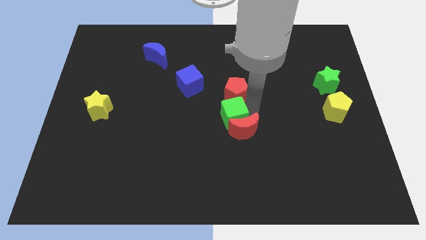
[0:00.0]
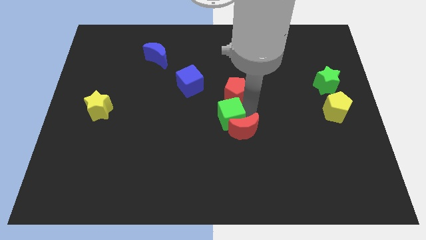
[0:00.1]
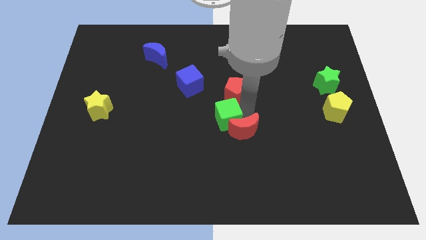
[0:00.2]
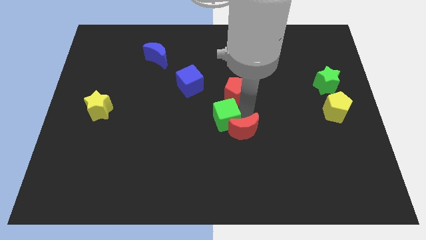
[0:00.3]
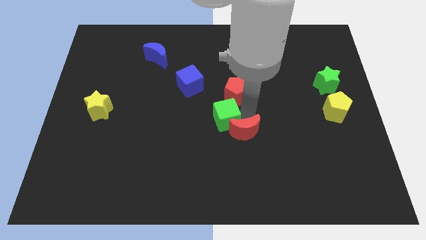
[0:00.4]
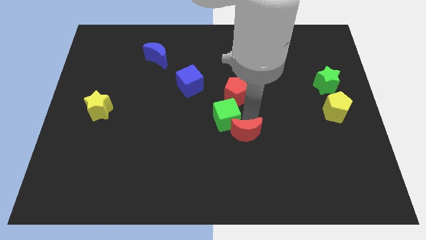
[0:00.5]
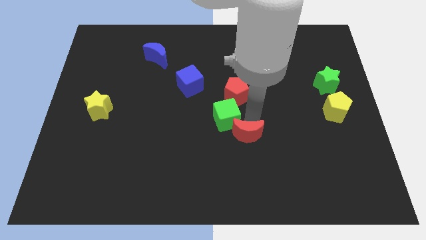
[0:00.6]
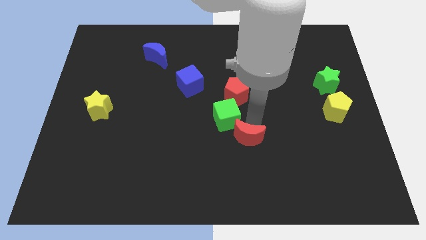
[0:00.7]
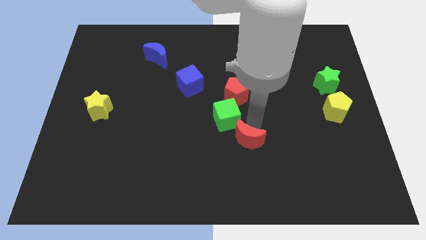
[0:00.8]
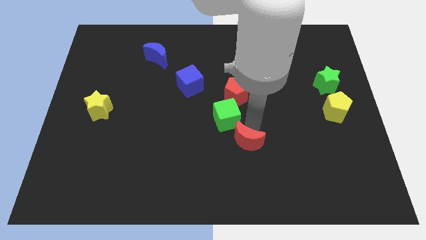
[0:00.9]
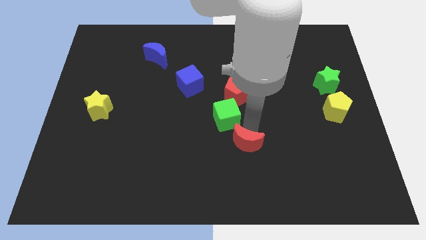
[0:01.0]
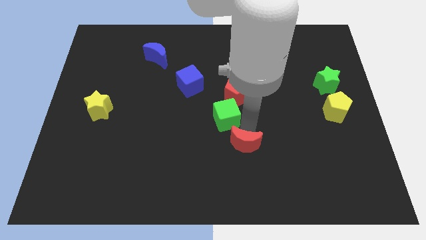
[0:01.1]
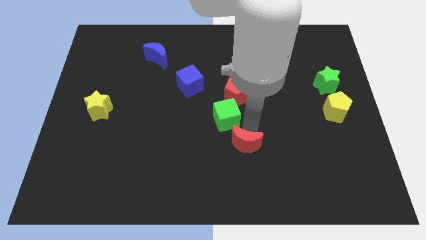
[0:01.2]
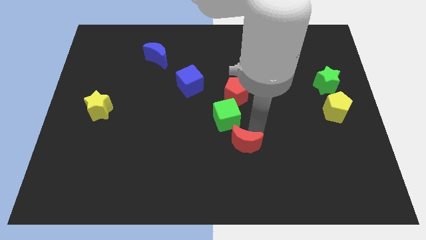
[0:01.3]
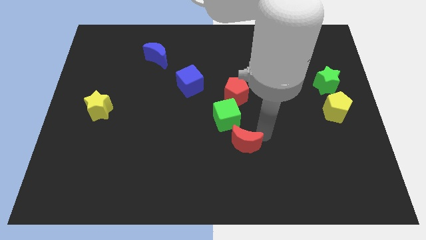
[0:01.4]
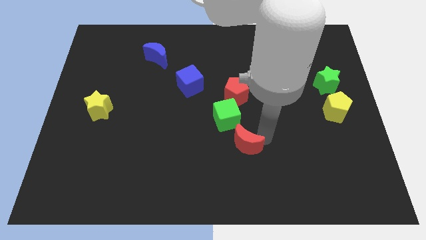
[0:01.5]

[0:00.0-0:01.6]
place the red moon below the green cube

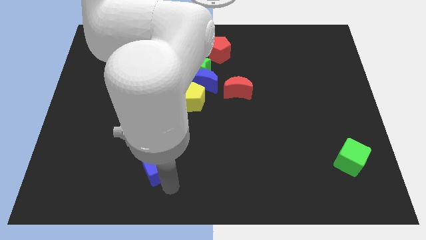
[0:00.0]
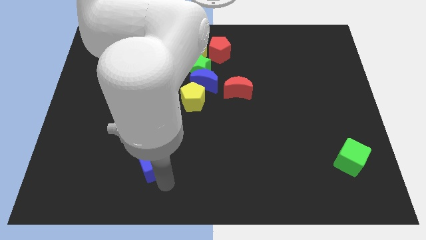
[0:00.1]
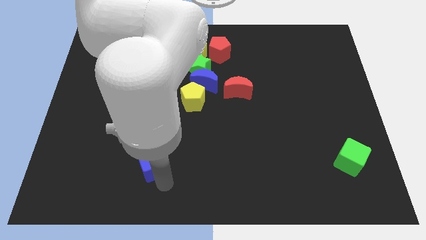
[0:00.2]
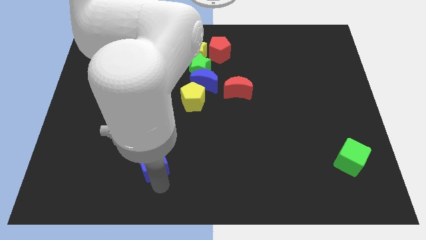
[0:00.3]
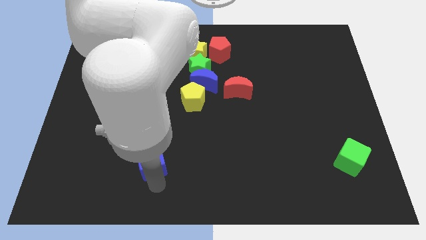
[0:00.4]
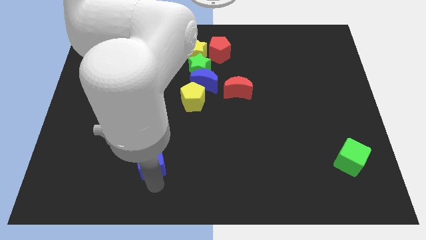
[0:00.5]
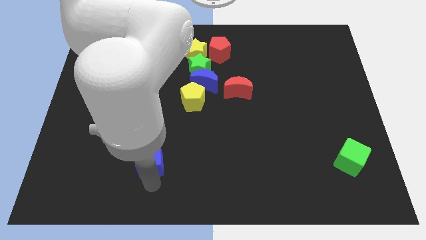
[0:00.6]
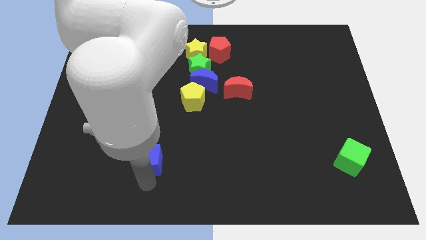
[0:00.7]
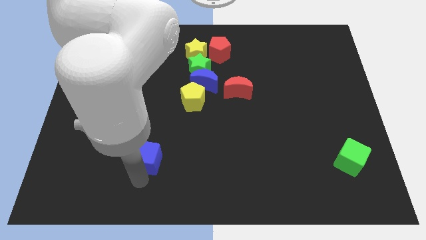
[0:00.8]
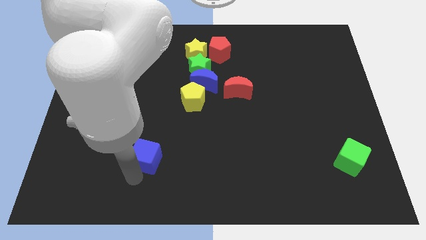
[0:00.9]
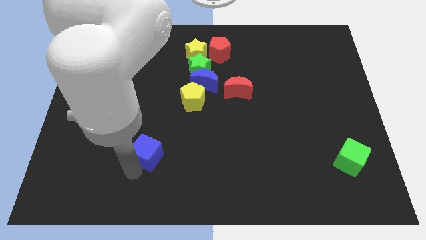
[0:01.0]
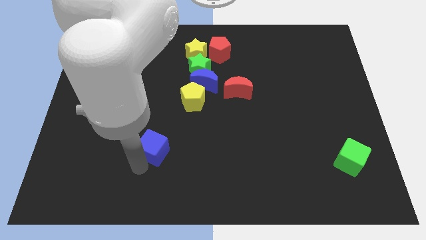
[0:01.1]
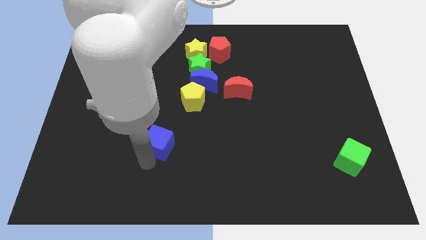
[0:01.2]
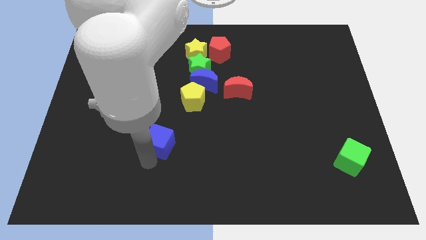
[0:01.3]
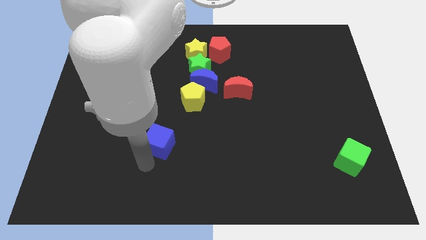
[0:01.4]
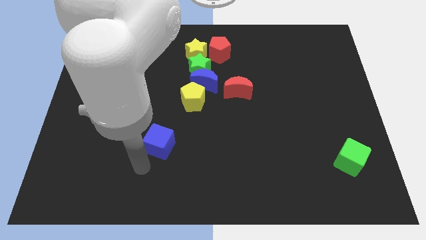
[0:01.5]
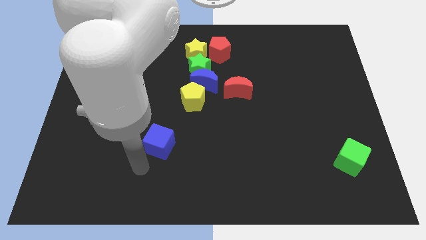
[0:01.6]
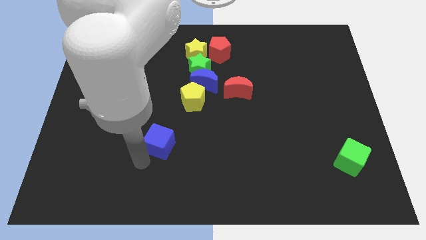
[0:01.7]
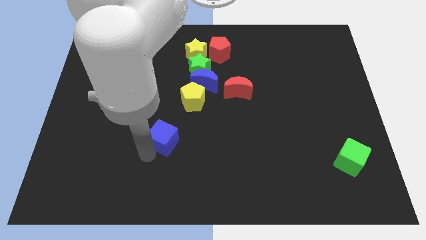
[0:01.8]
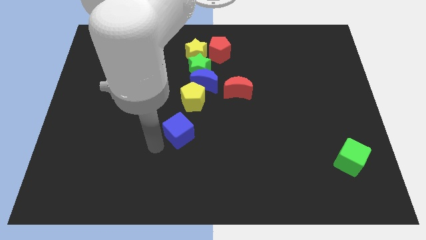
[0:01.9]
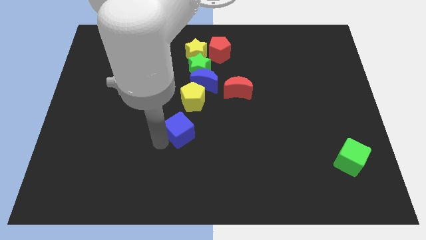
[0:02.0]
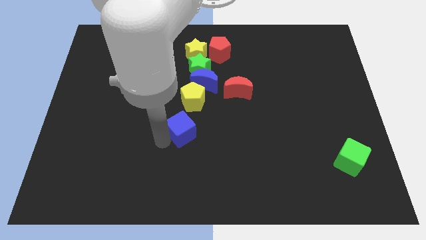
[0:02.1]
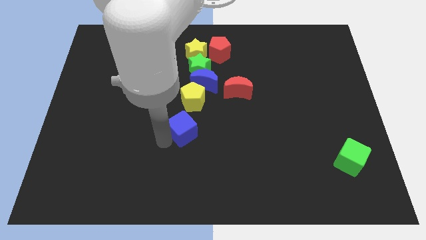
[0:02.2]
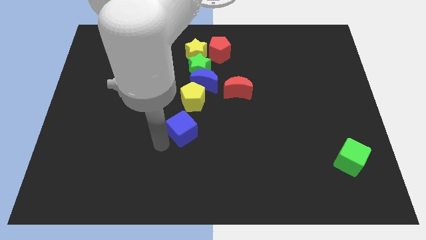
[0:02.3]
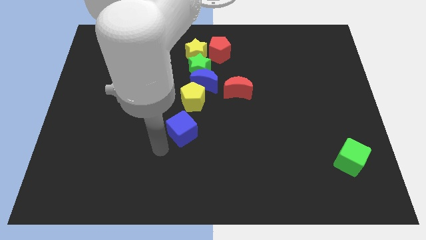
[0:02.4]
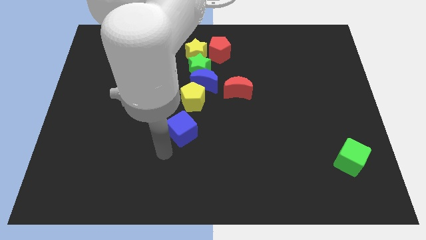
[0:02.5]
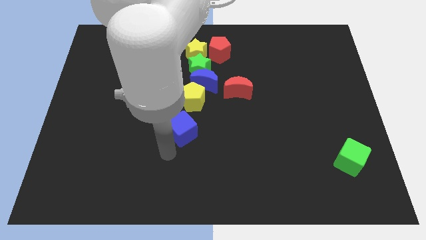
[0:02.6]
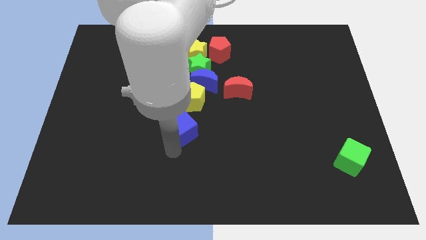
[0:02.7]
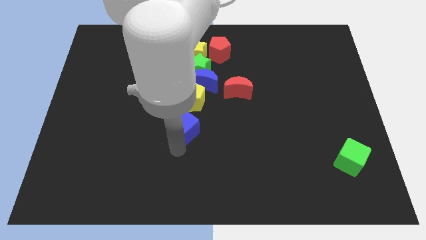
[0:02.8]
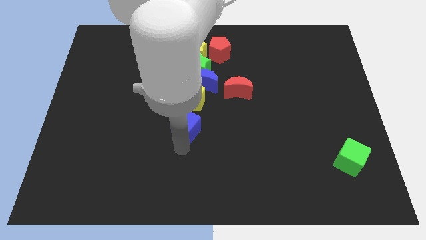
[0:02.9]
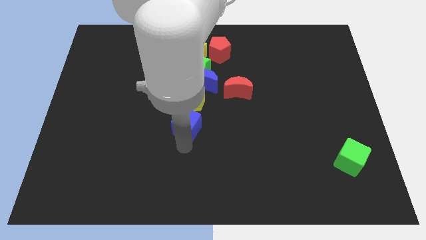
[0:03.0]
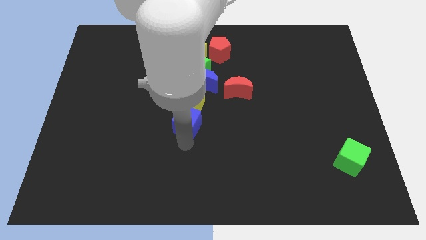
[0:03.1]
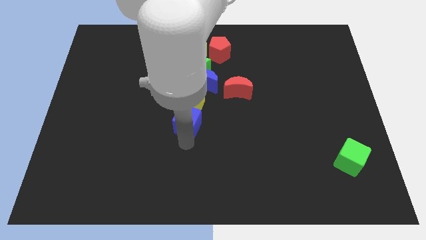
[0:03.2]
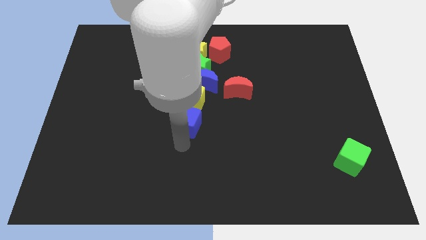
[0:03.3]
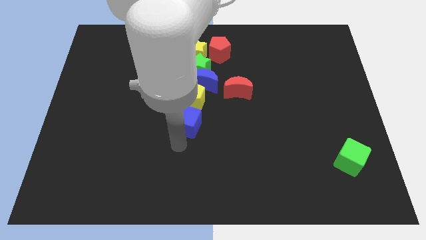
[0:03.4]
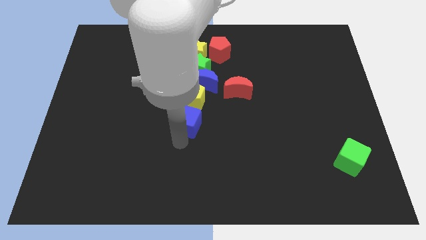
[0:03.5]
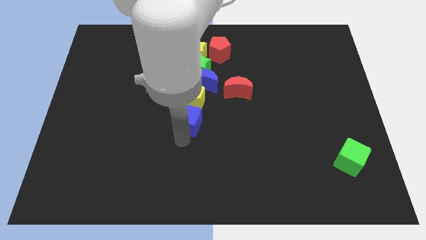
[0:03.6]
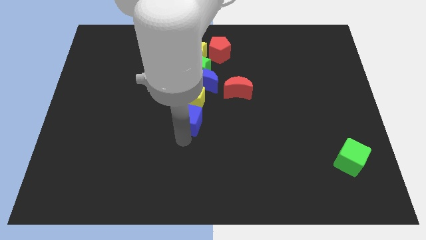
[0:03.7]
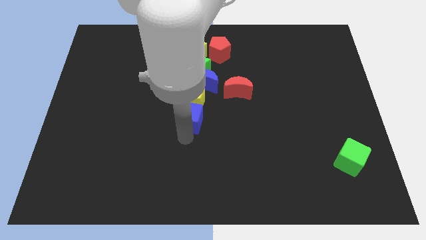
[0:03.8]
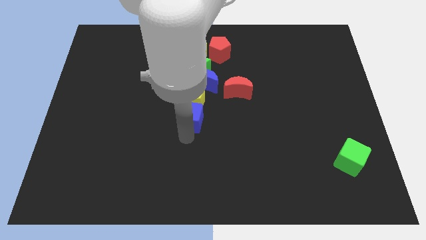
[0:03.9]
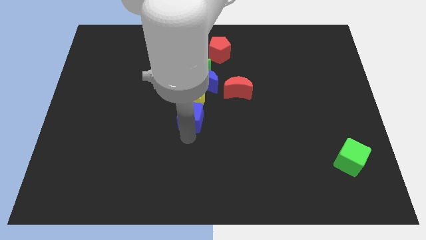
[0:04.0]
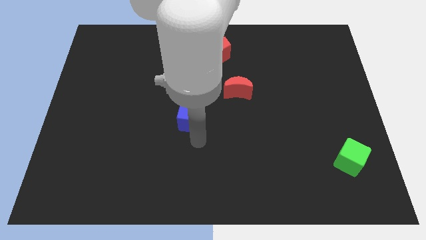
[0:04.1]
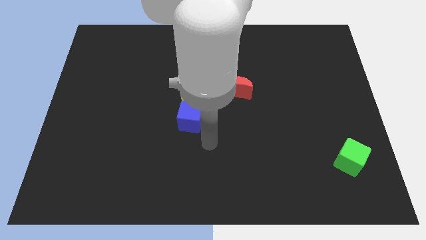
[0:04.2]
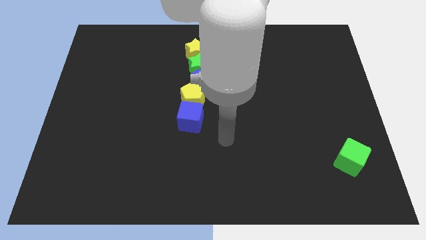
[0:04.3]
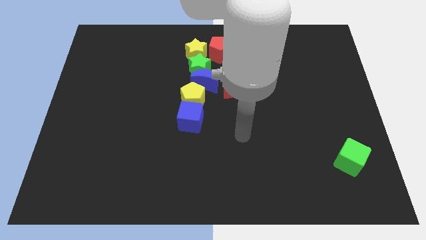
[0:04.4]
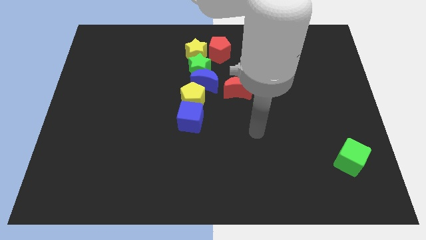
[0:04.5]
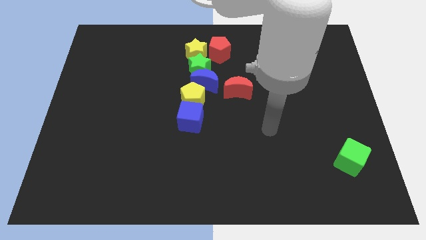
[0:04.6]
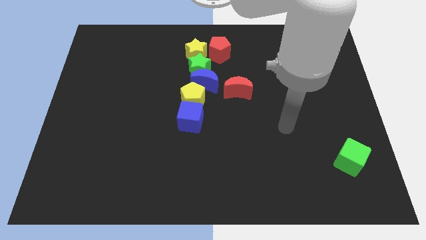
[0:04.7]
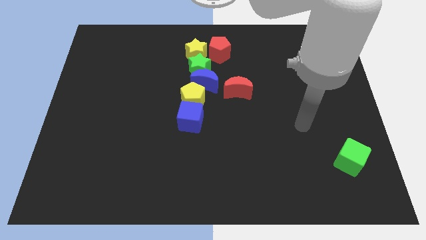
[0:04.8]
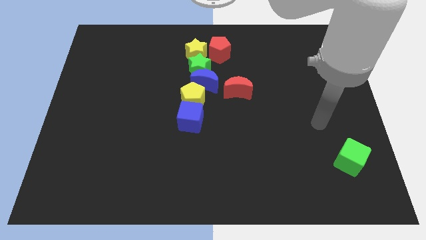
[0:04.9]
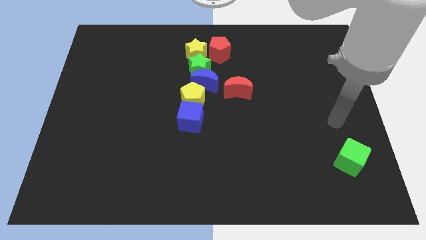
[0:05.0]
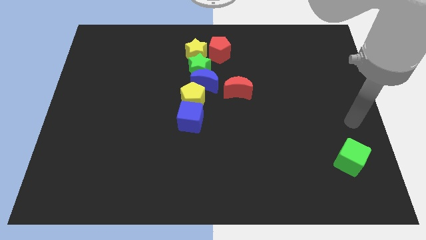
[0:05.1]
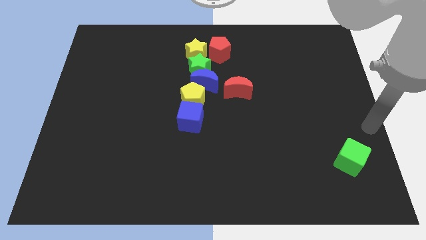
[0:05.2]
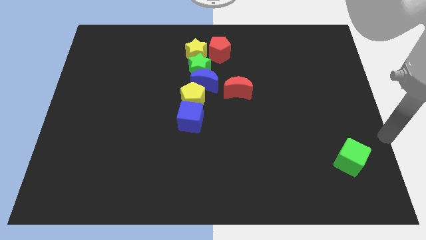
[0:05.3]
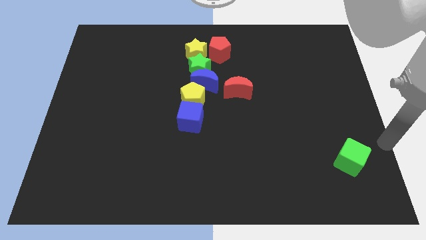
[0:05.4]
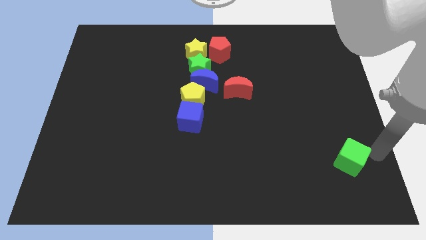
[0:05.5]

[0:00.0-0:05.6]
move blue cube close to yellow pentagon

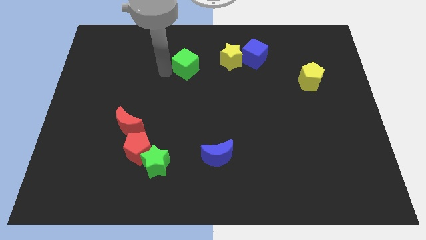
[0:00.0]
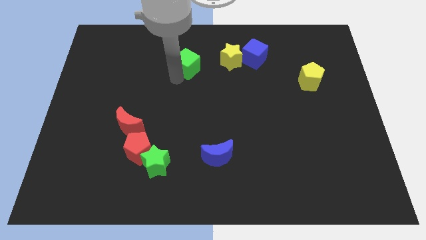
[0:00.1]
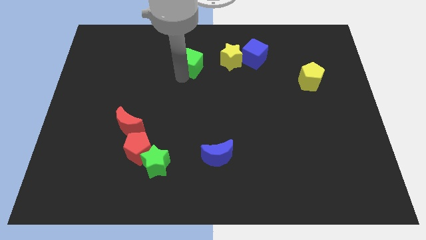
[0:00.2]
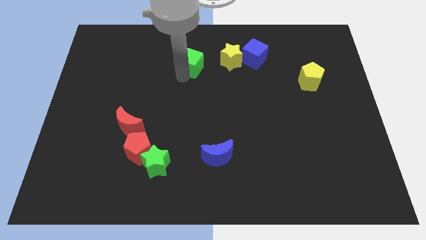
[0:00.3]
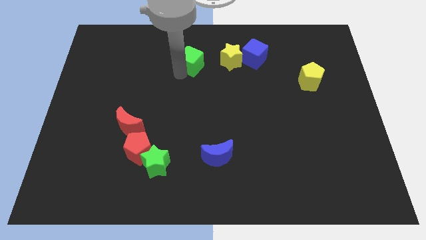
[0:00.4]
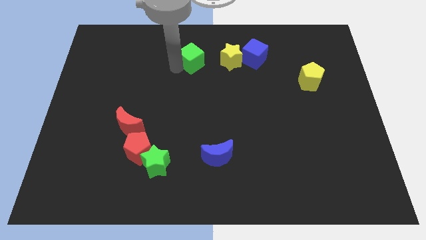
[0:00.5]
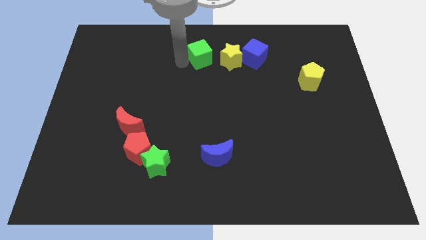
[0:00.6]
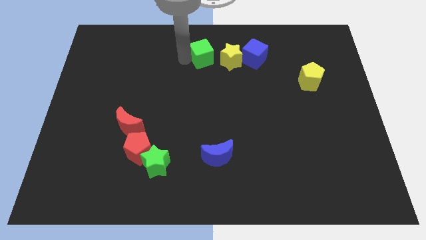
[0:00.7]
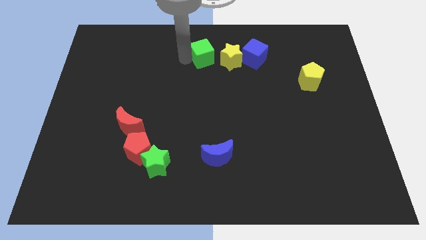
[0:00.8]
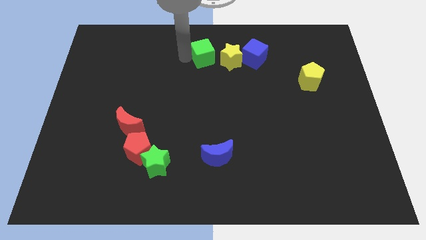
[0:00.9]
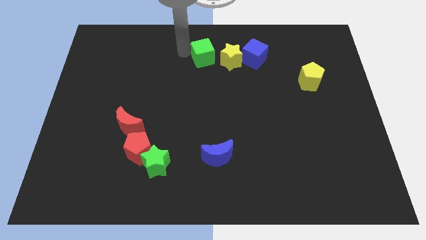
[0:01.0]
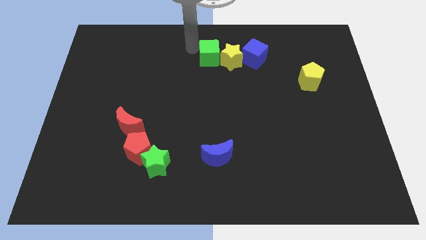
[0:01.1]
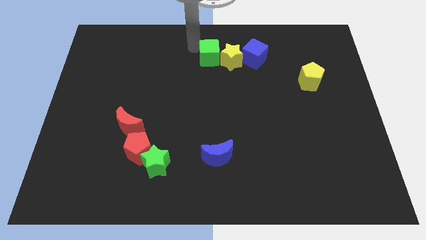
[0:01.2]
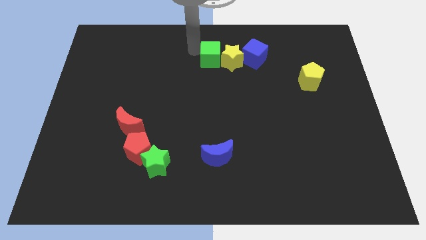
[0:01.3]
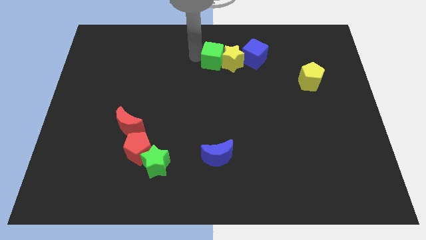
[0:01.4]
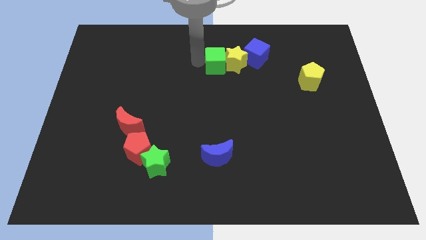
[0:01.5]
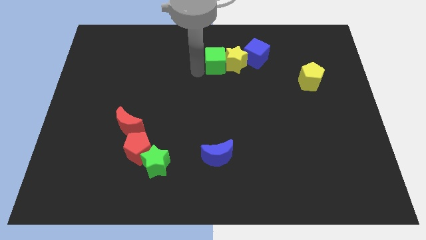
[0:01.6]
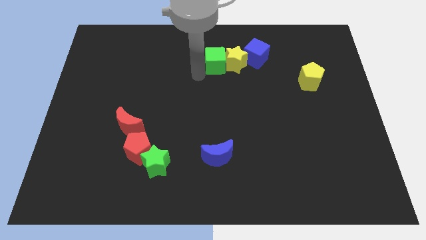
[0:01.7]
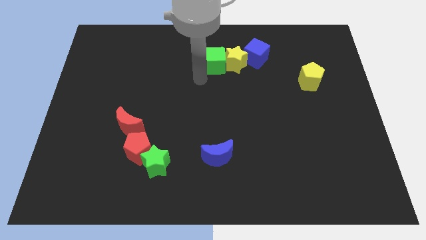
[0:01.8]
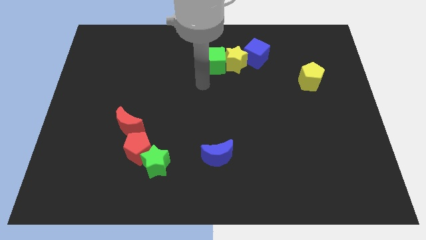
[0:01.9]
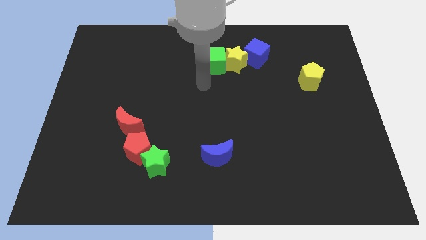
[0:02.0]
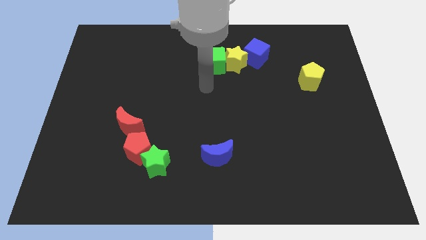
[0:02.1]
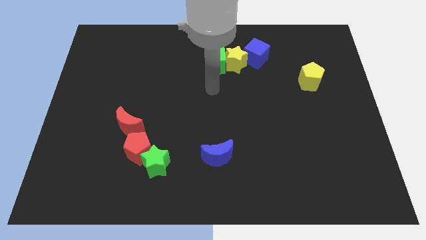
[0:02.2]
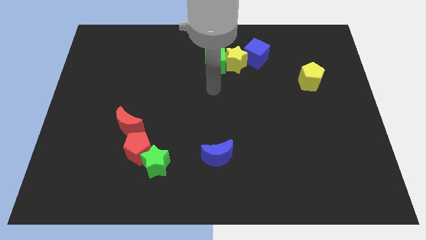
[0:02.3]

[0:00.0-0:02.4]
push the green cube into the yellow star
